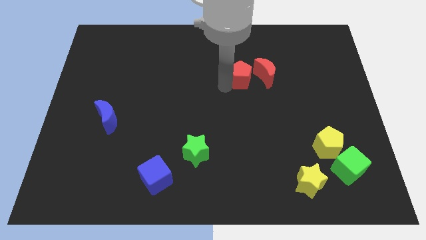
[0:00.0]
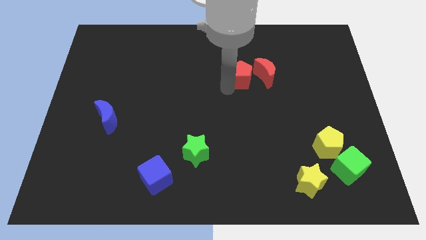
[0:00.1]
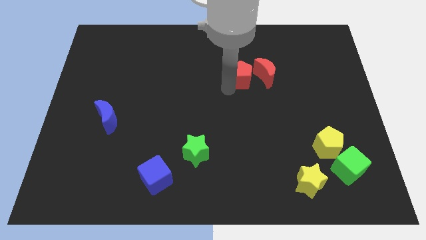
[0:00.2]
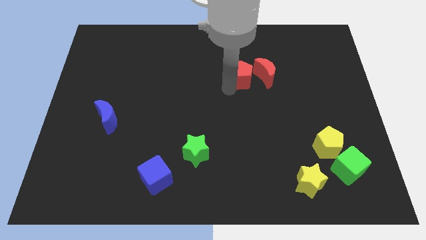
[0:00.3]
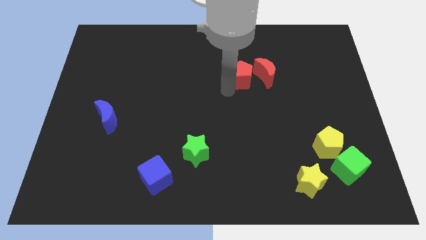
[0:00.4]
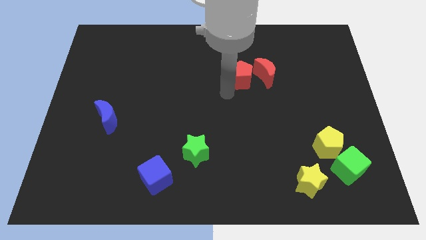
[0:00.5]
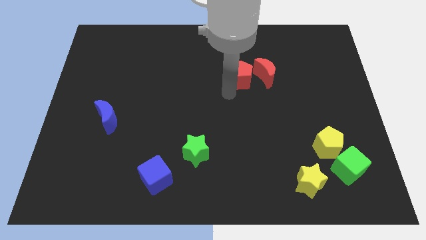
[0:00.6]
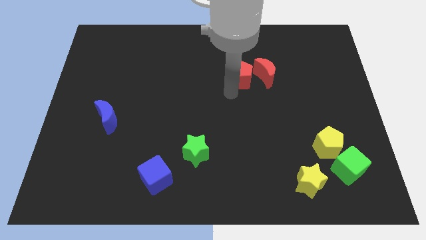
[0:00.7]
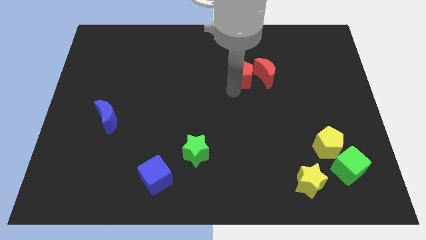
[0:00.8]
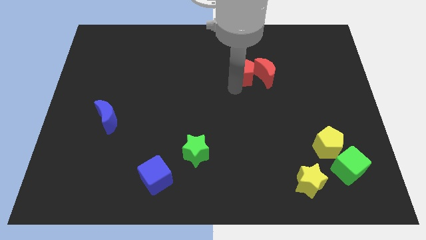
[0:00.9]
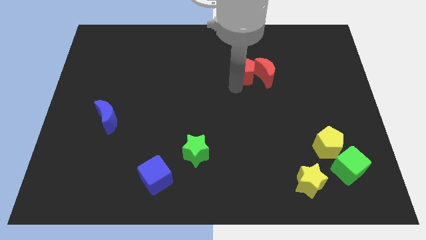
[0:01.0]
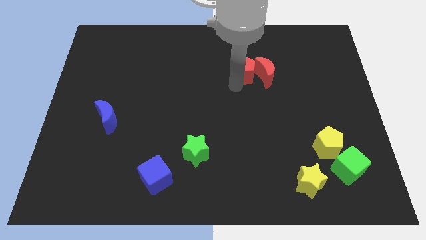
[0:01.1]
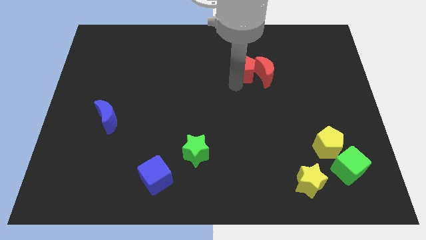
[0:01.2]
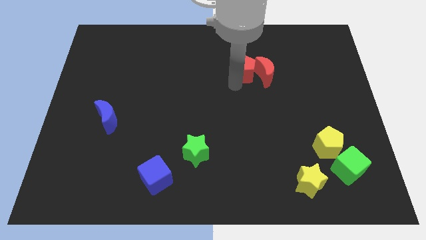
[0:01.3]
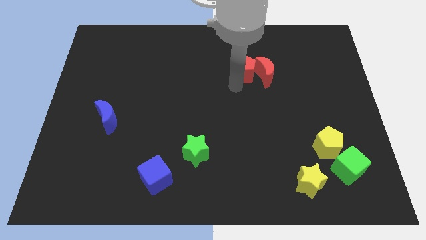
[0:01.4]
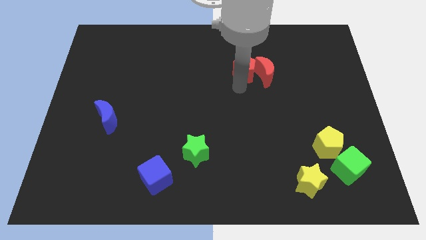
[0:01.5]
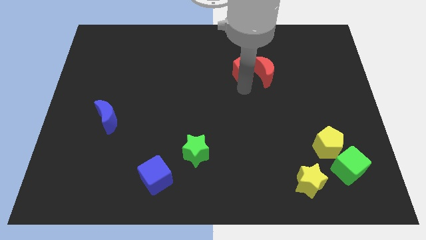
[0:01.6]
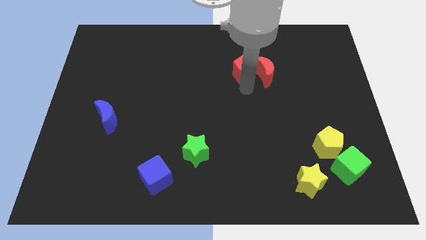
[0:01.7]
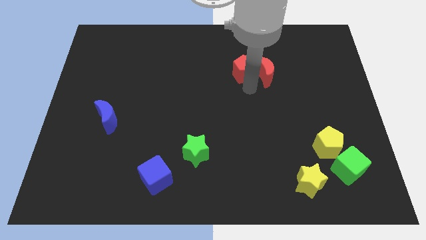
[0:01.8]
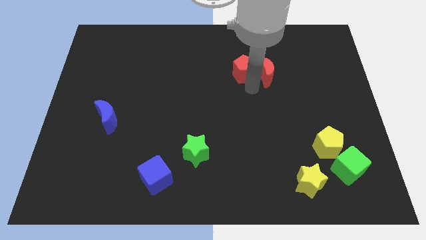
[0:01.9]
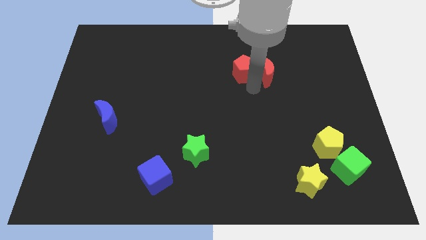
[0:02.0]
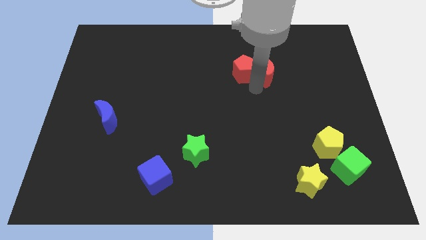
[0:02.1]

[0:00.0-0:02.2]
push the red pentagon into the red moon

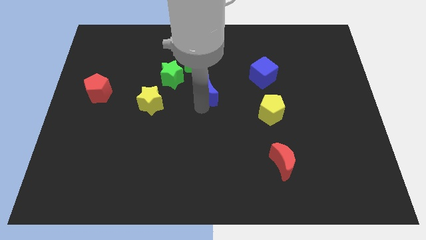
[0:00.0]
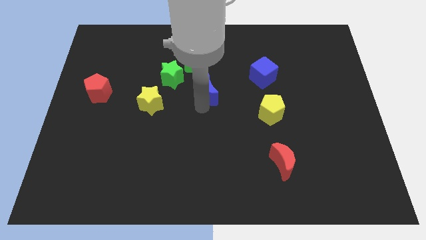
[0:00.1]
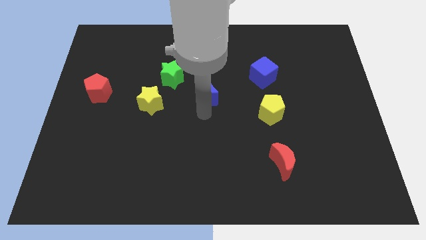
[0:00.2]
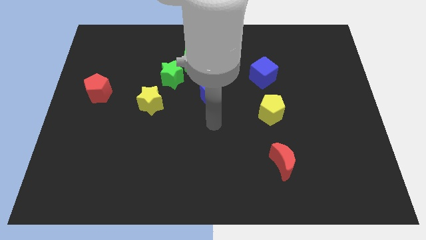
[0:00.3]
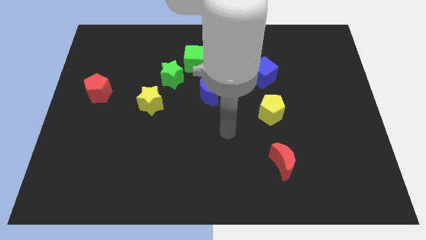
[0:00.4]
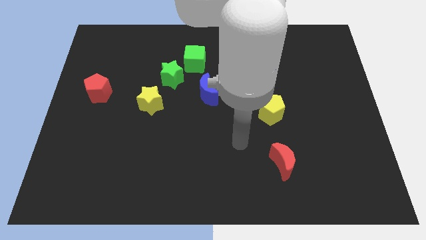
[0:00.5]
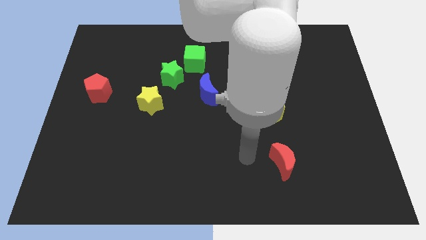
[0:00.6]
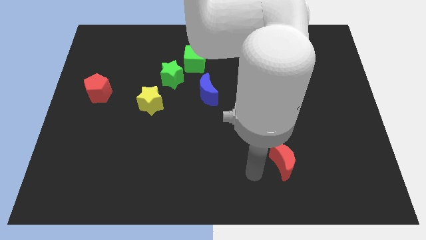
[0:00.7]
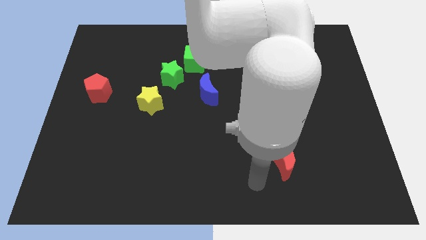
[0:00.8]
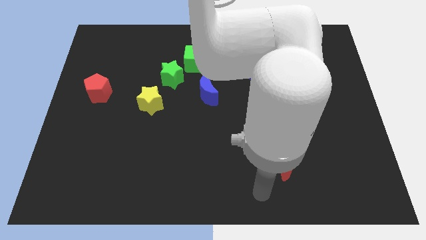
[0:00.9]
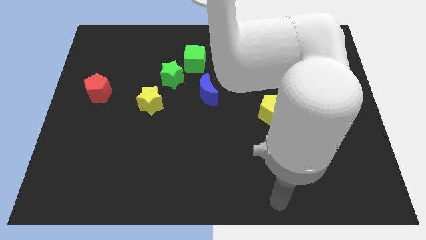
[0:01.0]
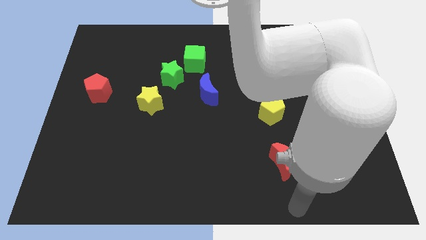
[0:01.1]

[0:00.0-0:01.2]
move the arm away from the blue moon

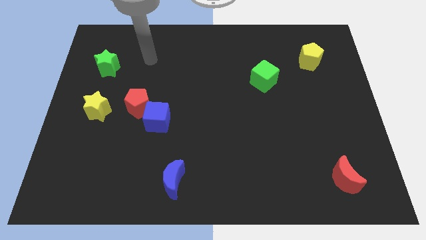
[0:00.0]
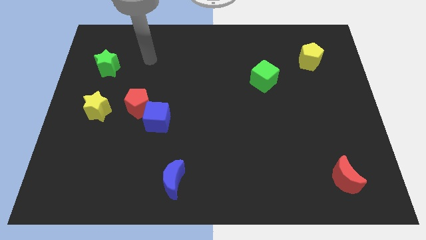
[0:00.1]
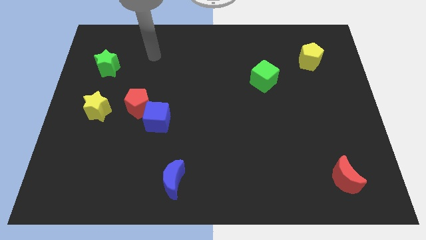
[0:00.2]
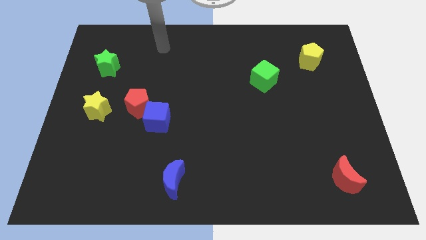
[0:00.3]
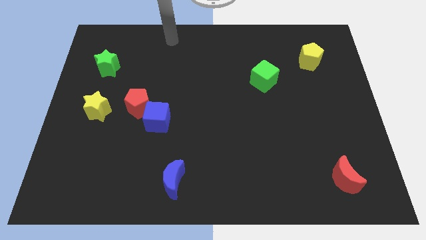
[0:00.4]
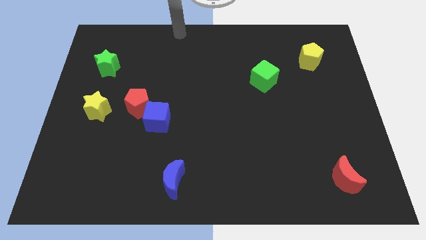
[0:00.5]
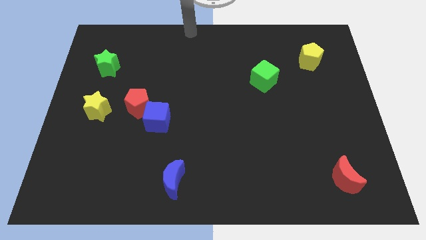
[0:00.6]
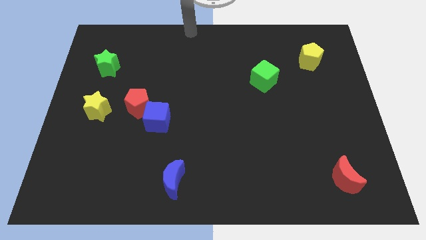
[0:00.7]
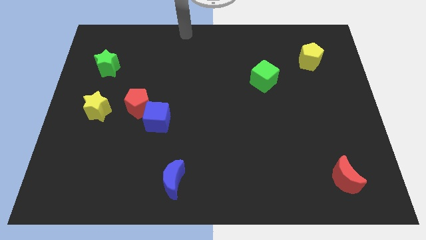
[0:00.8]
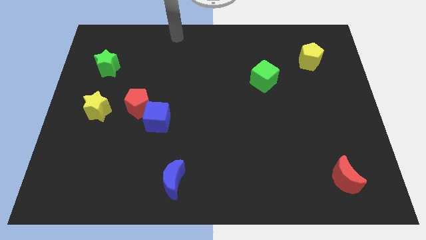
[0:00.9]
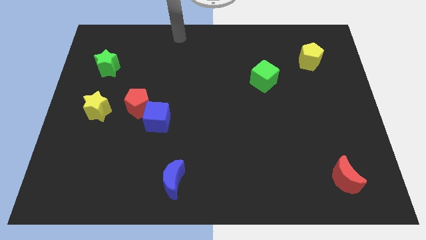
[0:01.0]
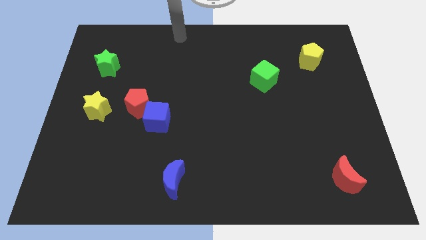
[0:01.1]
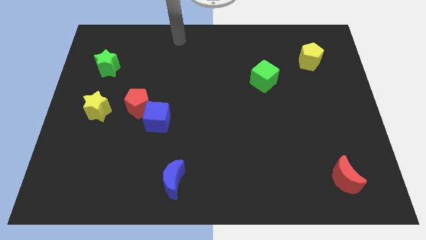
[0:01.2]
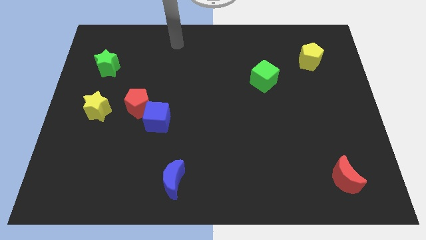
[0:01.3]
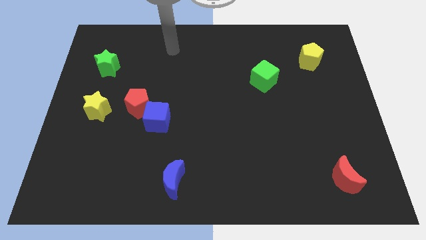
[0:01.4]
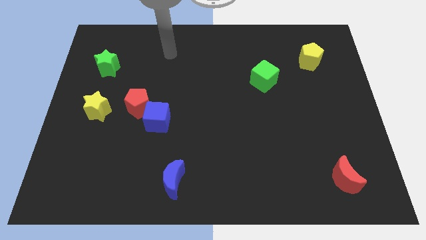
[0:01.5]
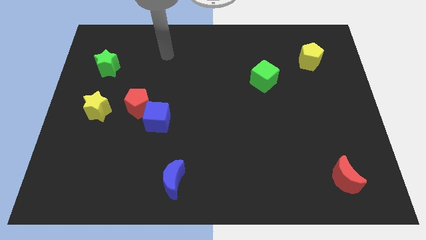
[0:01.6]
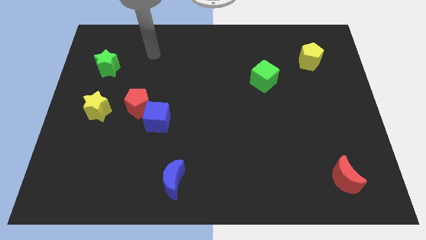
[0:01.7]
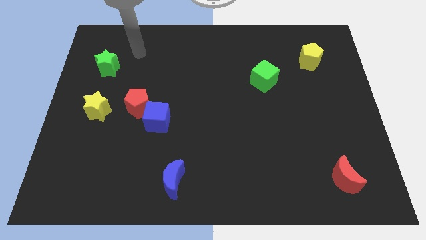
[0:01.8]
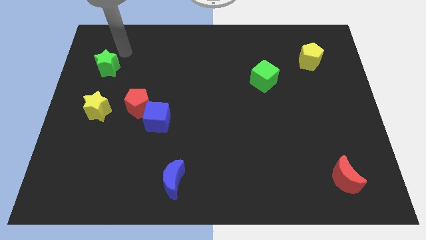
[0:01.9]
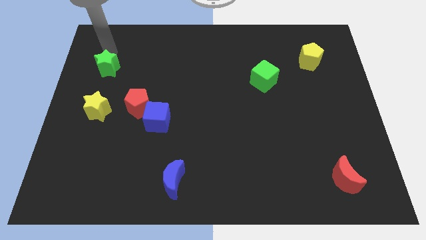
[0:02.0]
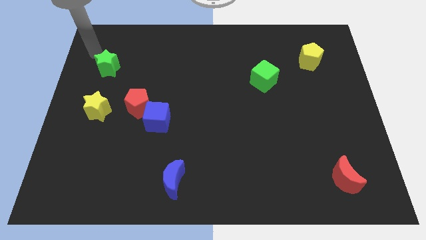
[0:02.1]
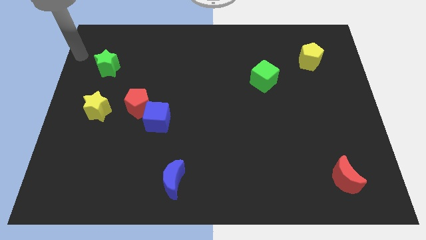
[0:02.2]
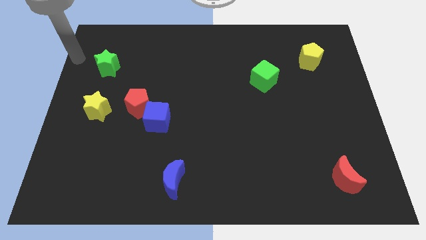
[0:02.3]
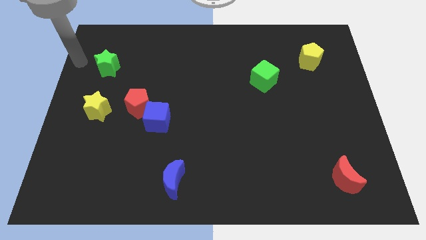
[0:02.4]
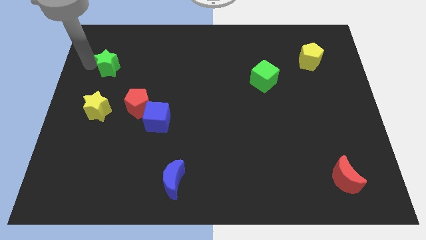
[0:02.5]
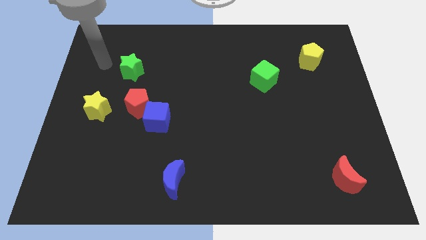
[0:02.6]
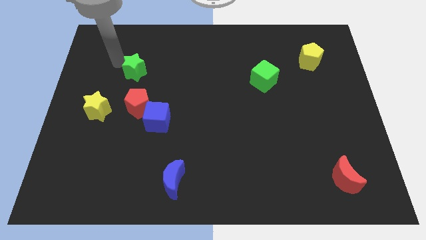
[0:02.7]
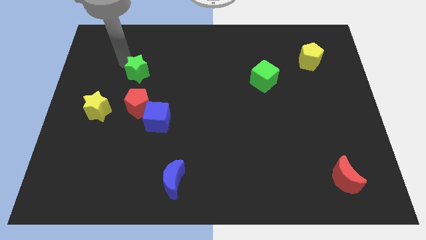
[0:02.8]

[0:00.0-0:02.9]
push the green star above the red pentagon

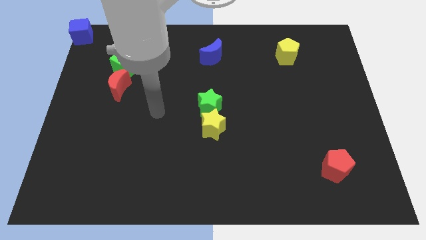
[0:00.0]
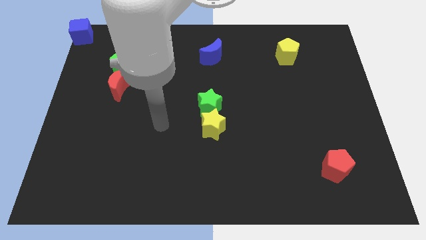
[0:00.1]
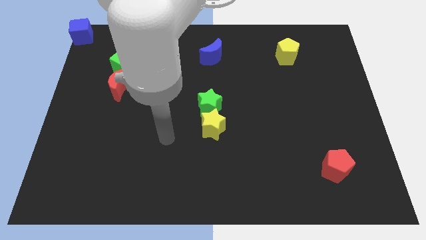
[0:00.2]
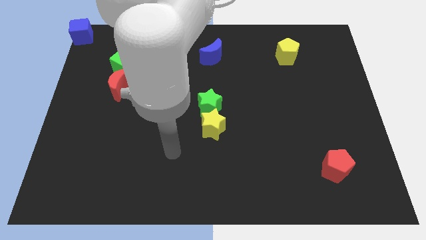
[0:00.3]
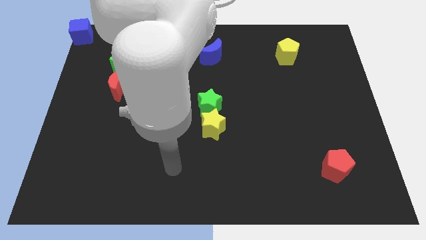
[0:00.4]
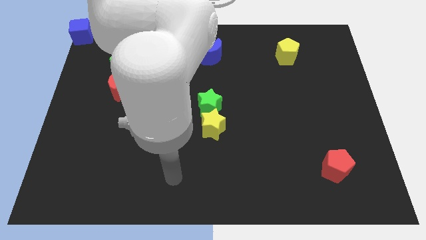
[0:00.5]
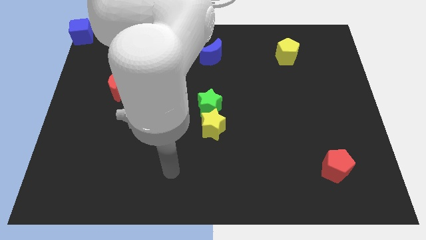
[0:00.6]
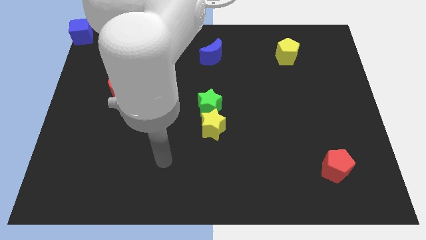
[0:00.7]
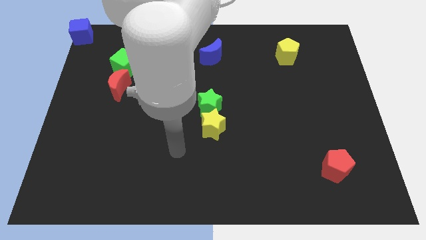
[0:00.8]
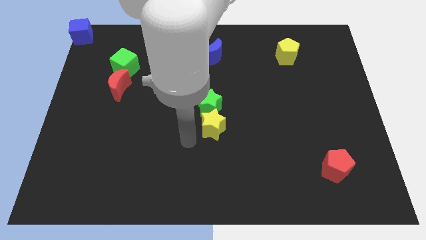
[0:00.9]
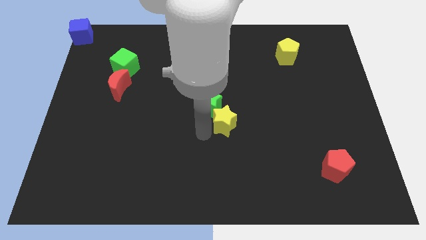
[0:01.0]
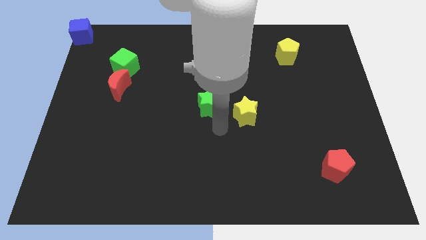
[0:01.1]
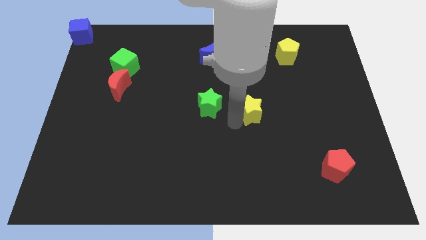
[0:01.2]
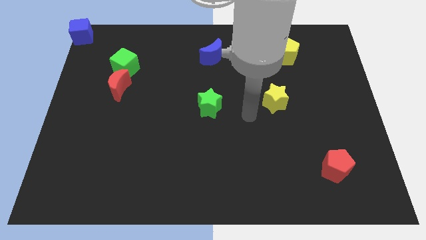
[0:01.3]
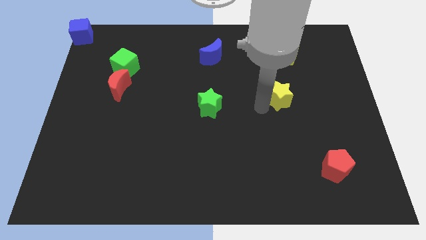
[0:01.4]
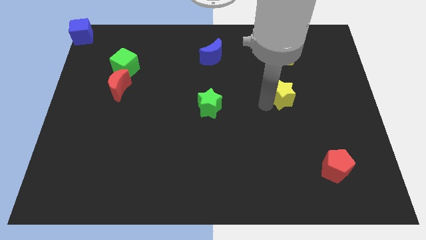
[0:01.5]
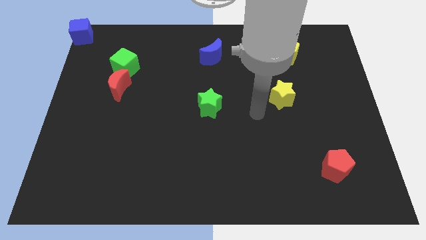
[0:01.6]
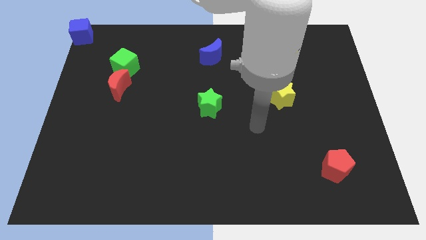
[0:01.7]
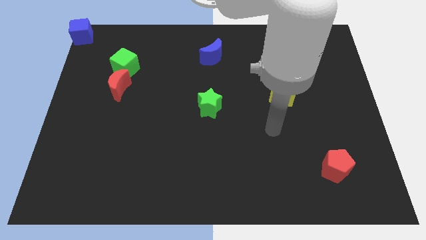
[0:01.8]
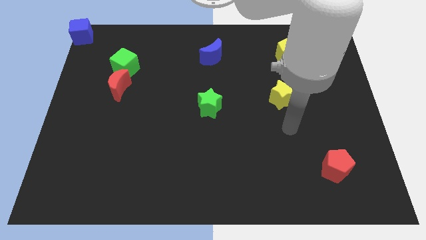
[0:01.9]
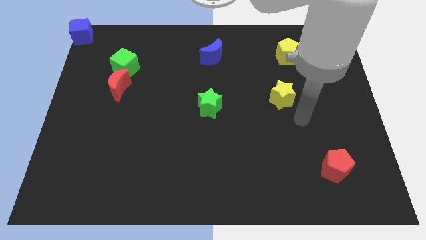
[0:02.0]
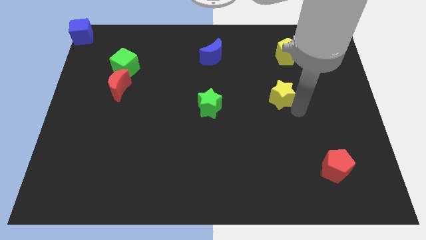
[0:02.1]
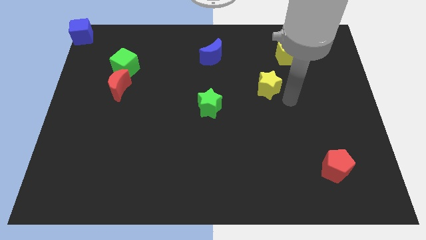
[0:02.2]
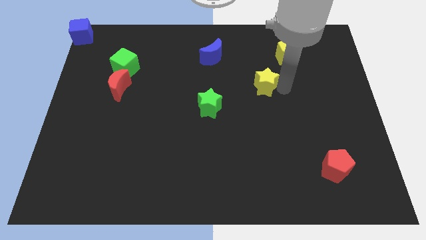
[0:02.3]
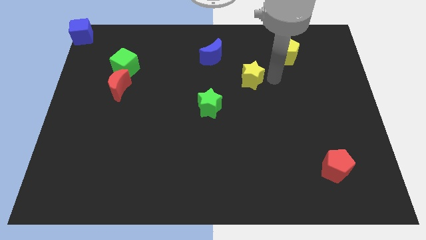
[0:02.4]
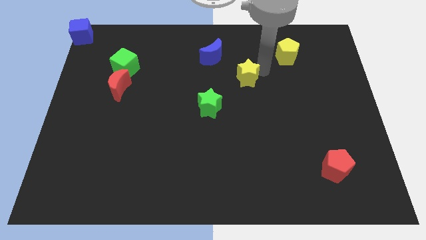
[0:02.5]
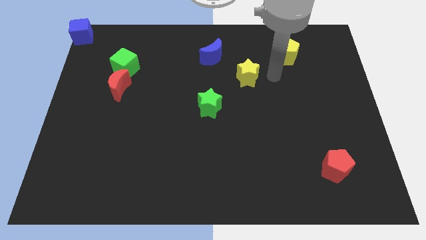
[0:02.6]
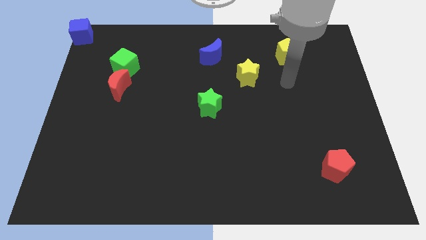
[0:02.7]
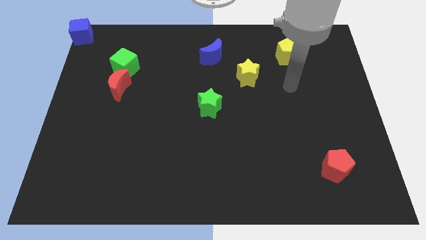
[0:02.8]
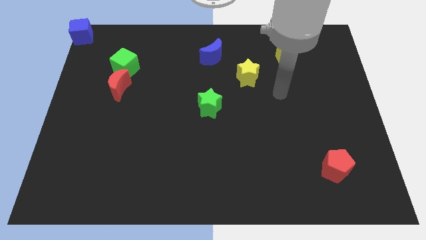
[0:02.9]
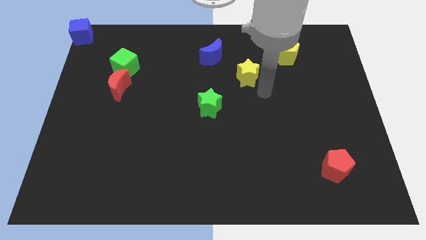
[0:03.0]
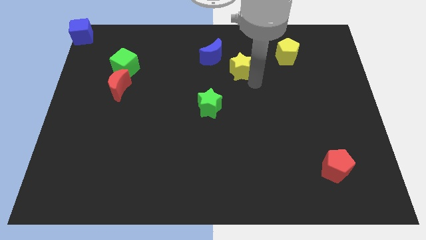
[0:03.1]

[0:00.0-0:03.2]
separate yellow star from the green star
